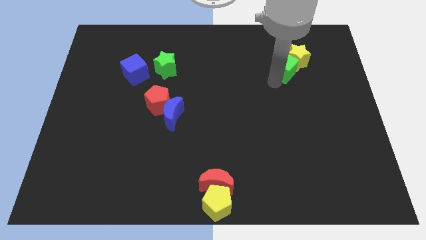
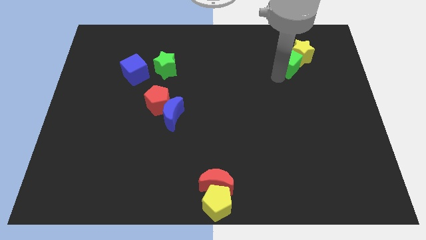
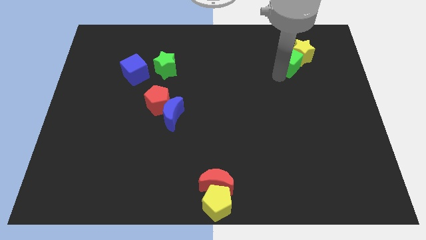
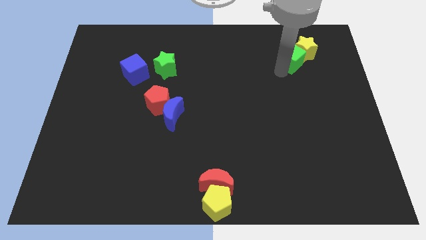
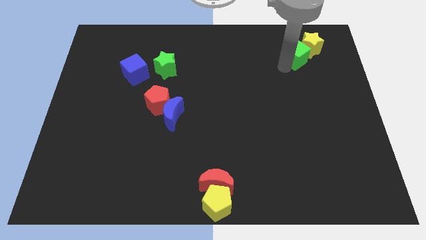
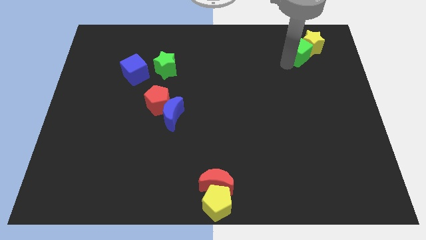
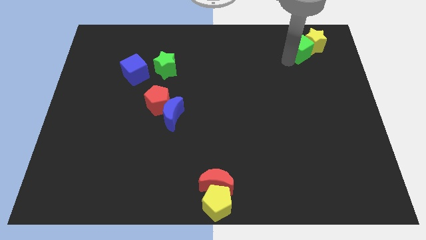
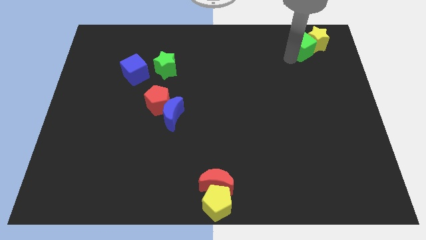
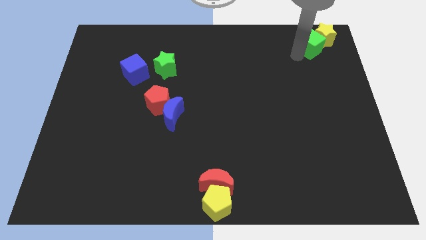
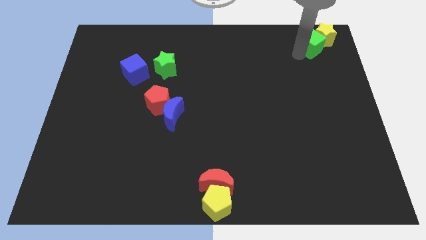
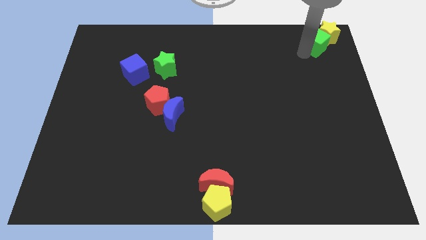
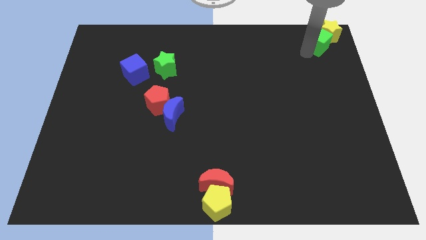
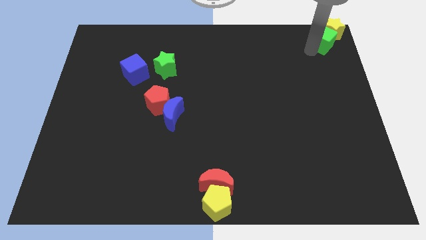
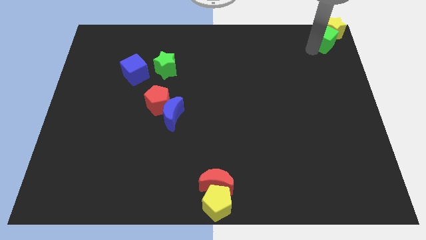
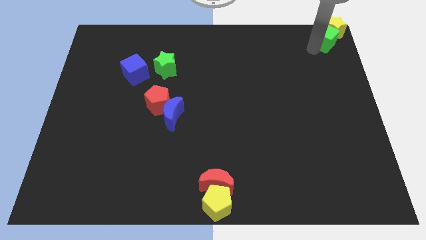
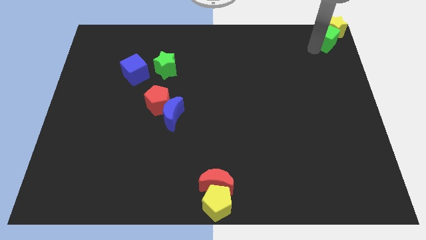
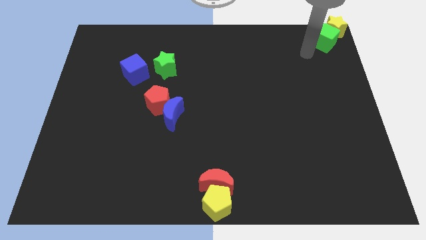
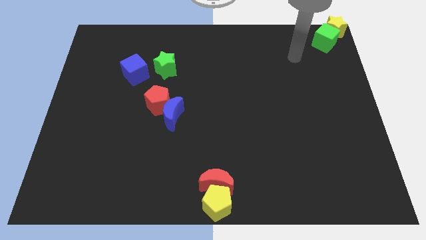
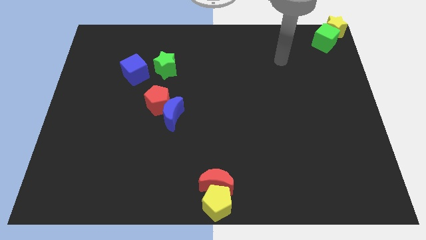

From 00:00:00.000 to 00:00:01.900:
push the green cube along with the yellow star to the top right corner of the board

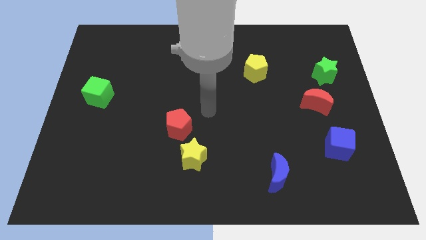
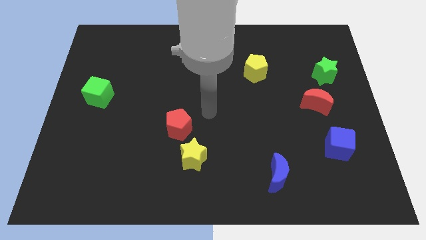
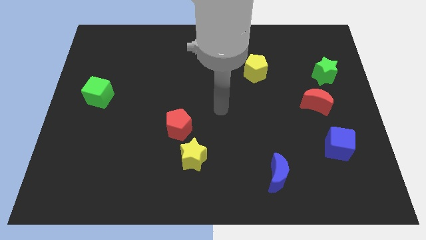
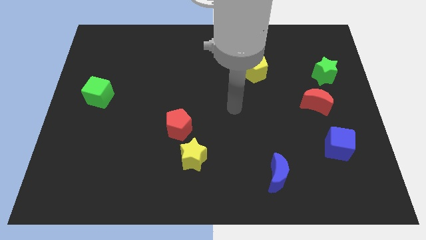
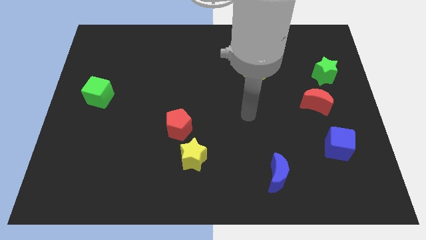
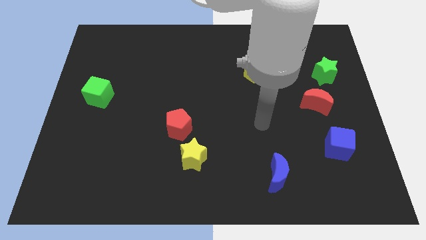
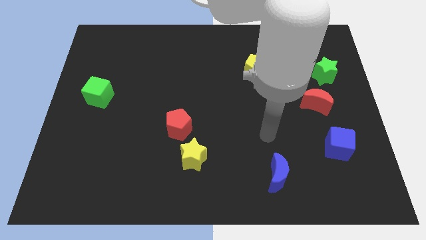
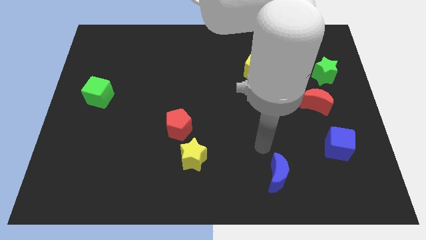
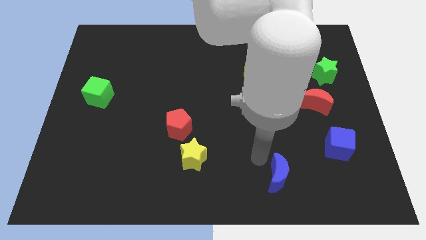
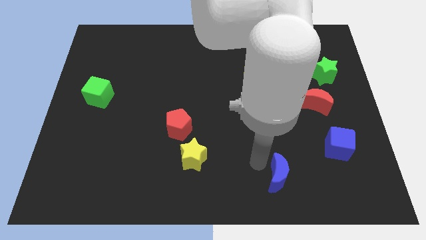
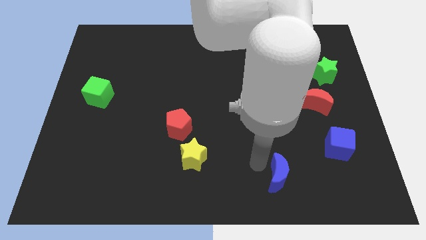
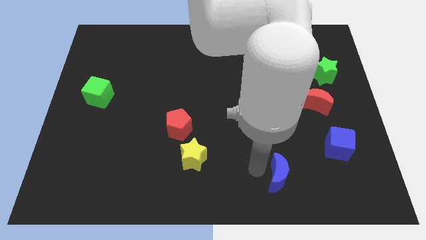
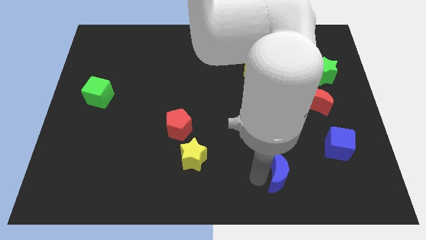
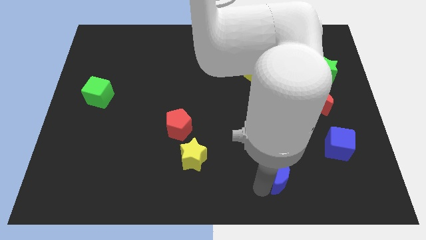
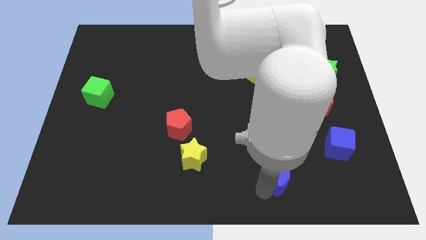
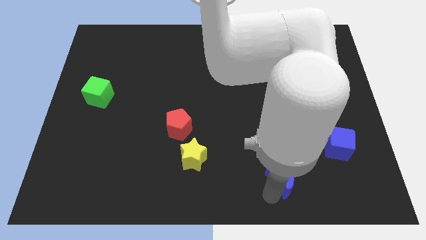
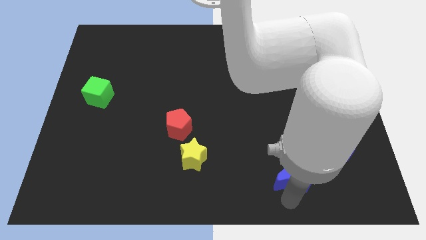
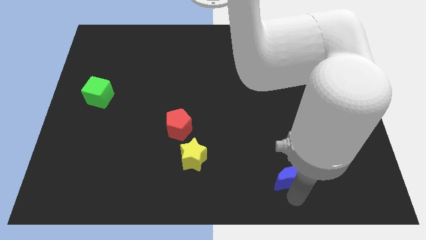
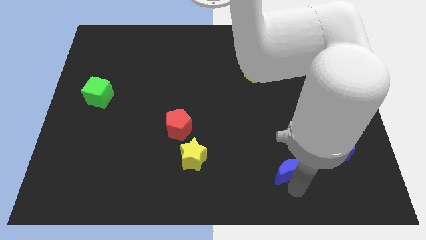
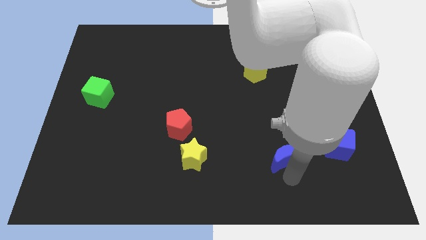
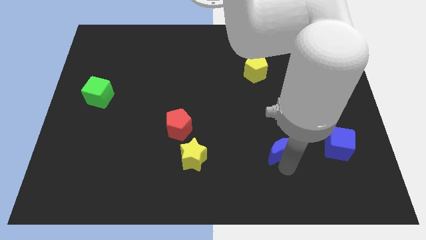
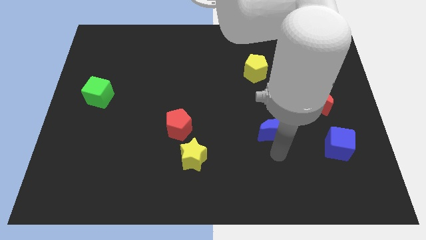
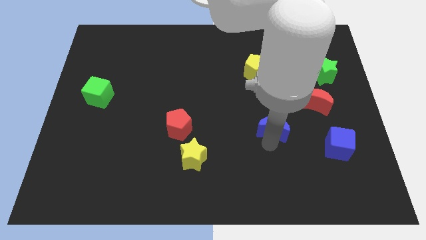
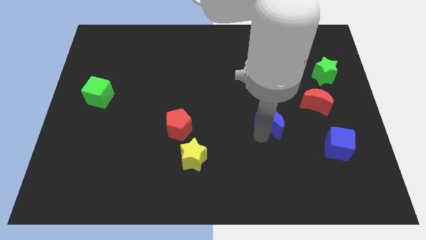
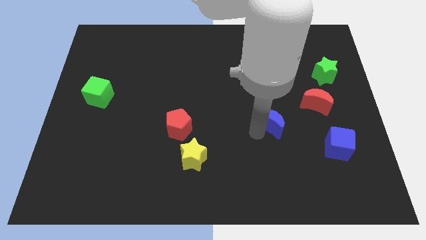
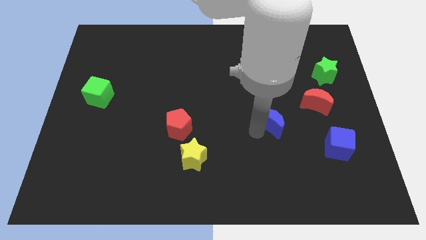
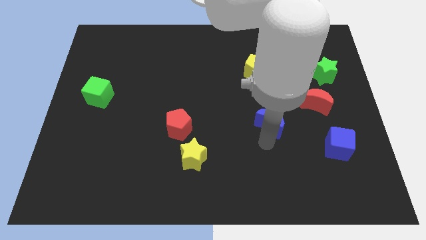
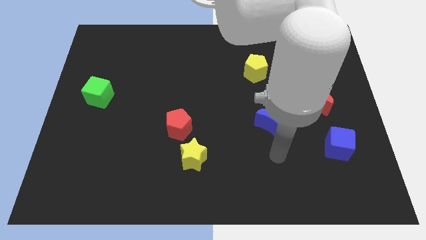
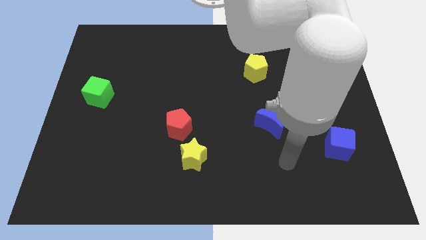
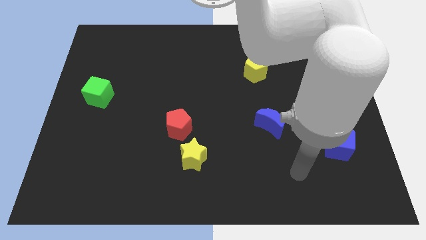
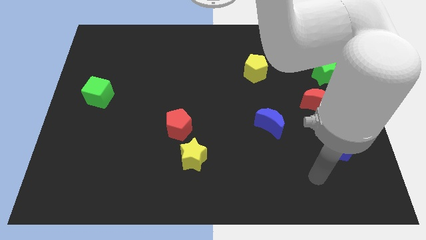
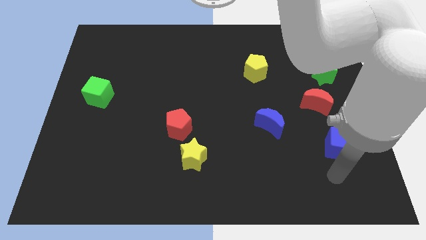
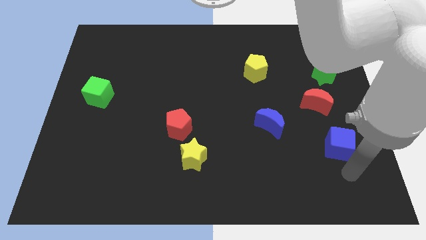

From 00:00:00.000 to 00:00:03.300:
move the blue crescent to the top of the board

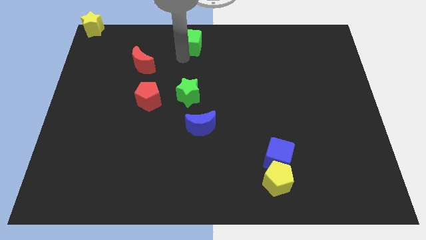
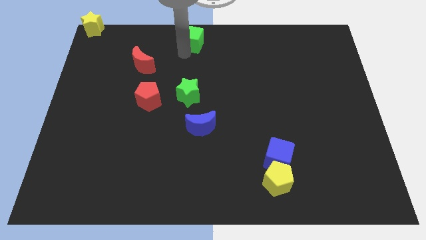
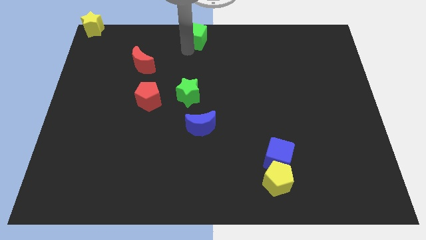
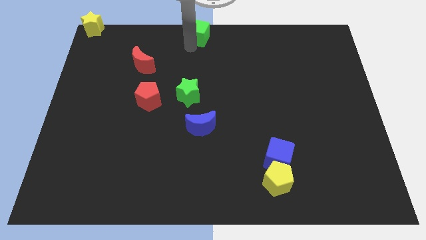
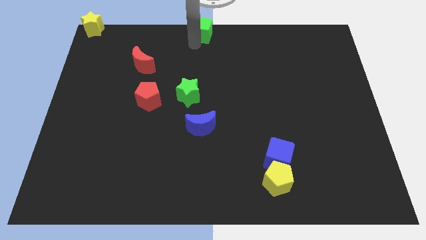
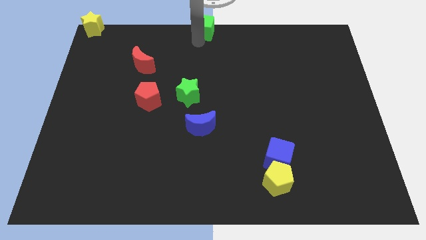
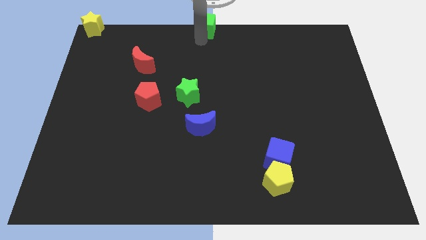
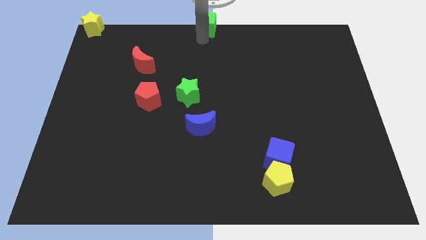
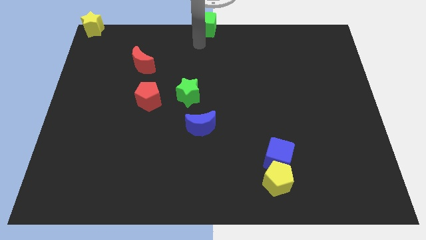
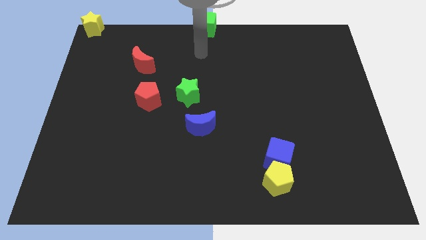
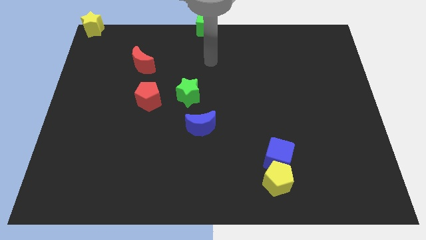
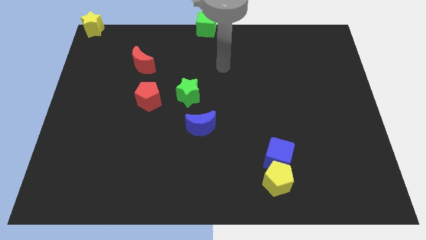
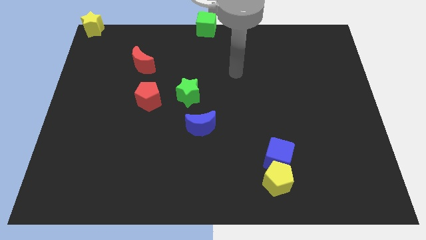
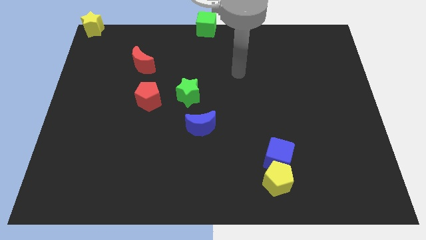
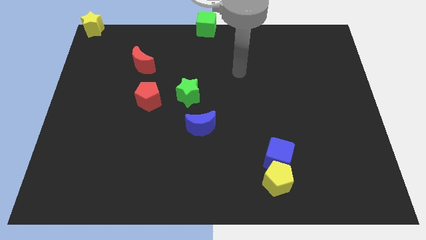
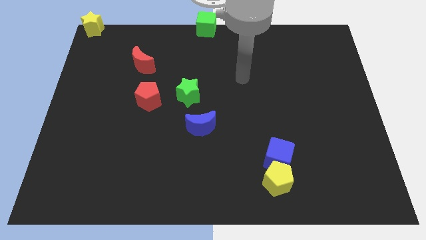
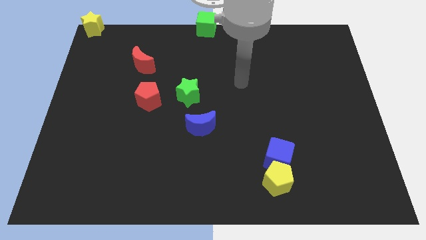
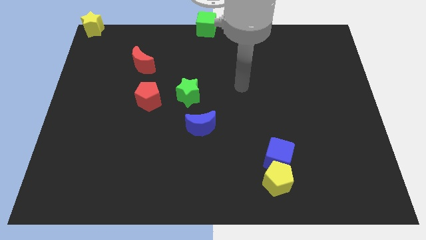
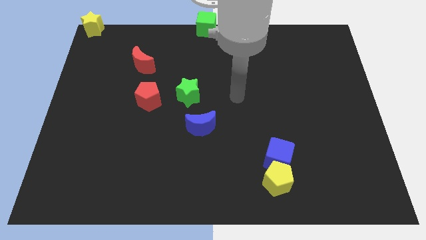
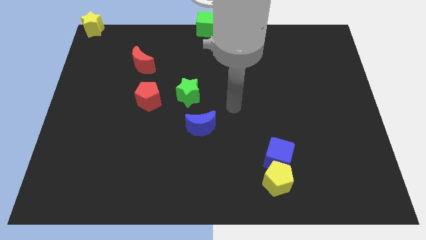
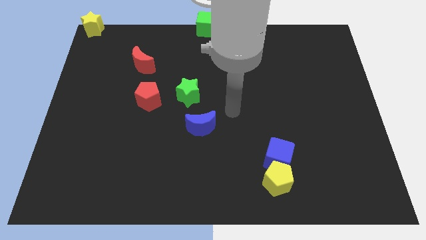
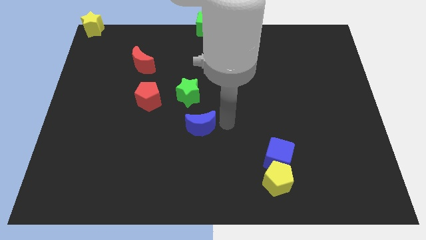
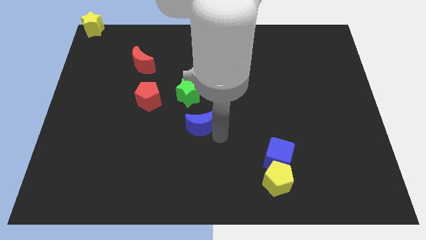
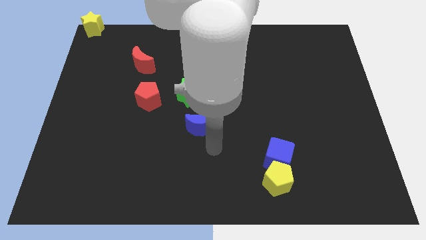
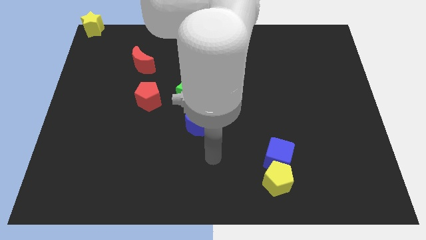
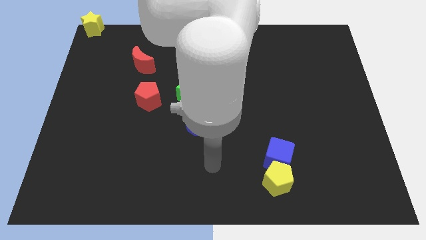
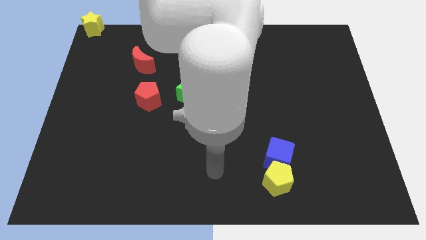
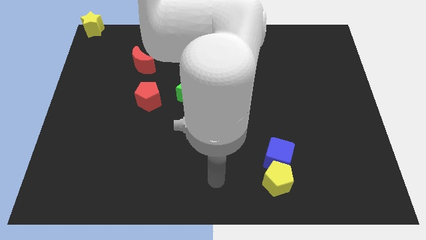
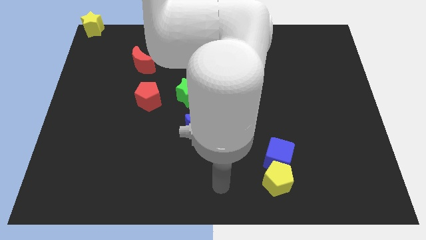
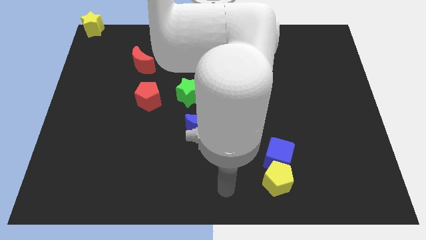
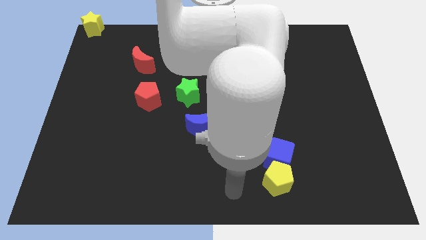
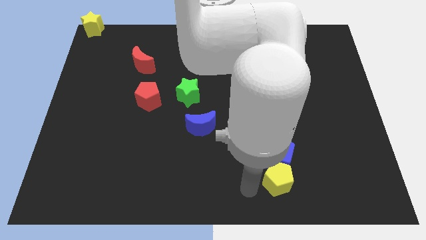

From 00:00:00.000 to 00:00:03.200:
place the green cube at the top center of the board

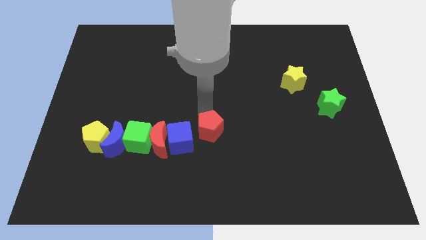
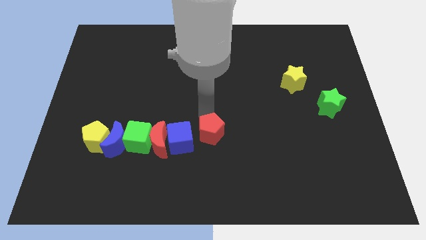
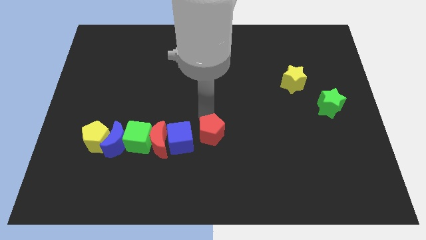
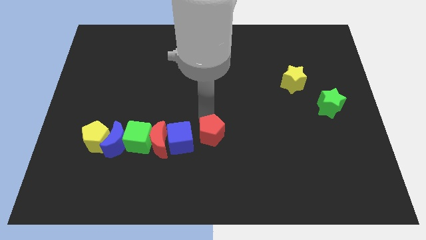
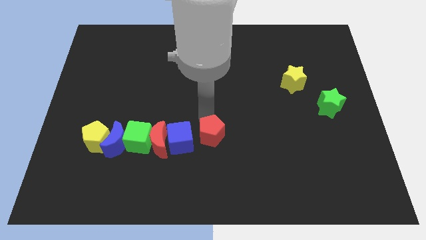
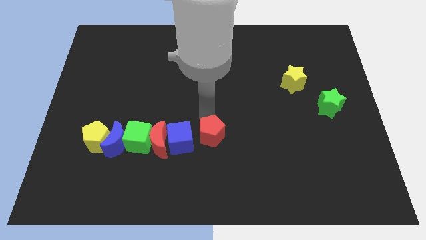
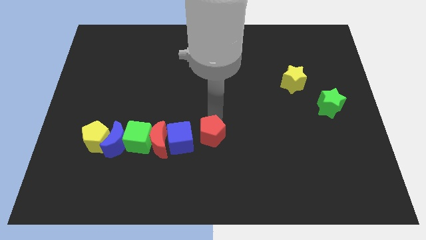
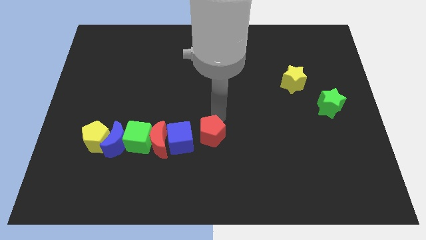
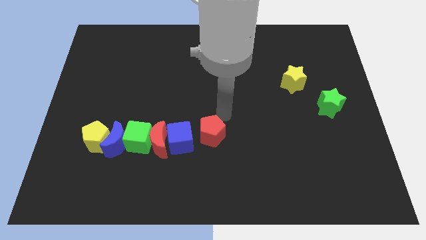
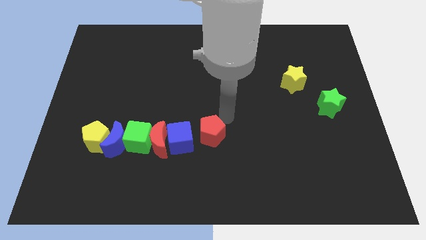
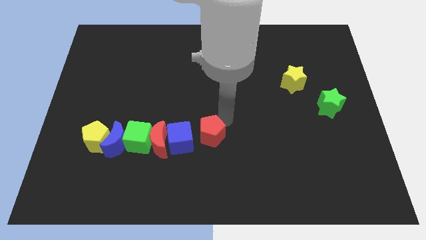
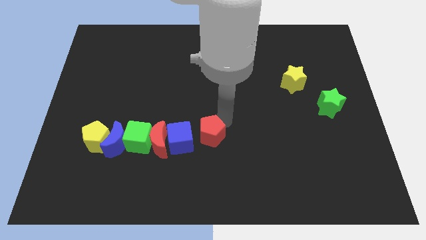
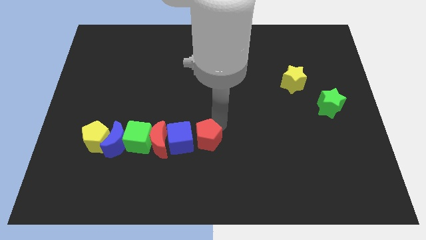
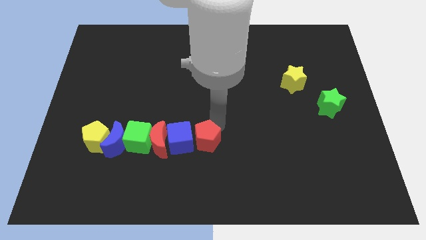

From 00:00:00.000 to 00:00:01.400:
move red pentagon right beside the blue cube
